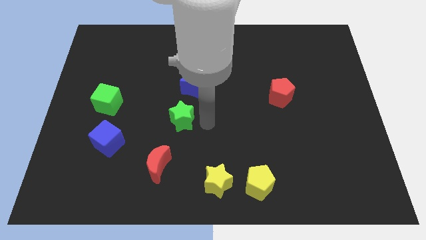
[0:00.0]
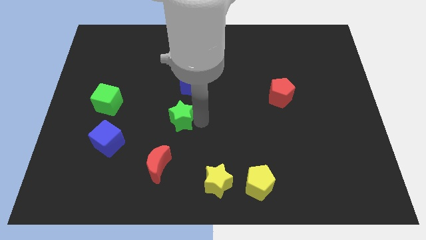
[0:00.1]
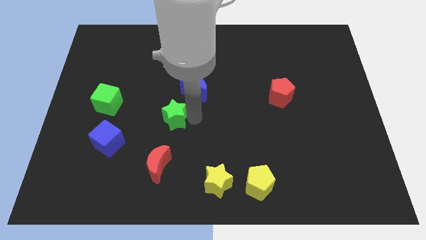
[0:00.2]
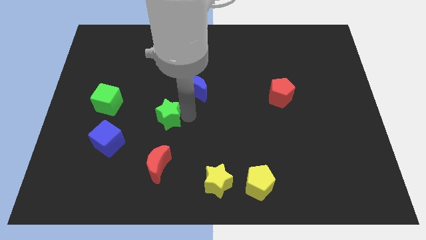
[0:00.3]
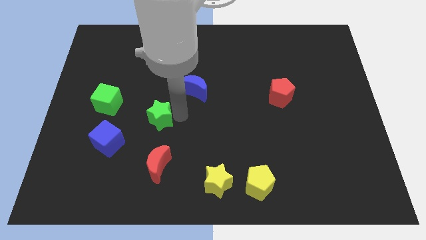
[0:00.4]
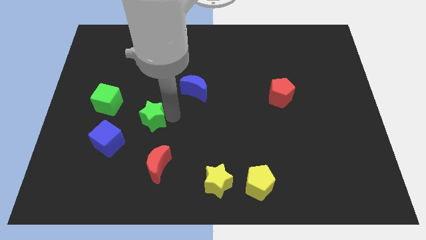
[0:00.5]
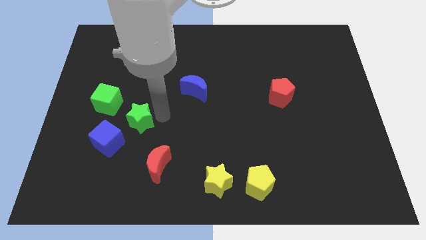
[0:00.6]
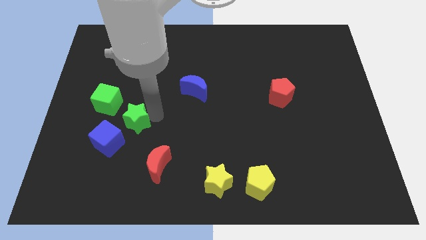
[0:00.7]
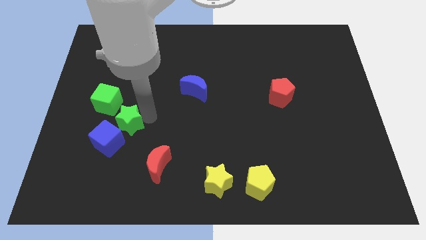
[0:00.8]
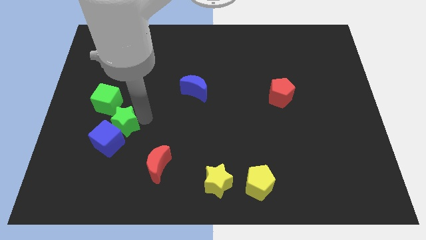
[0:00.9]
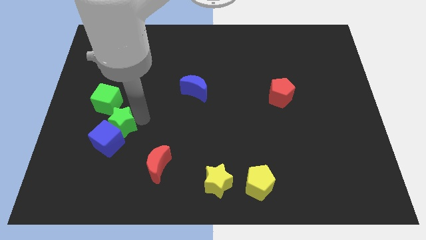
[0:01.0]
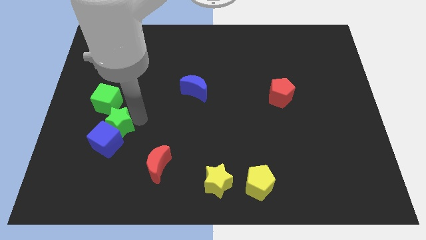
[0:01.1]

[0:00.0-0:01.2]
push the green star into the blue cube

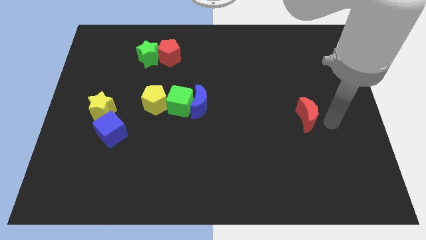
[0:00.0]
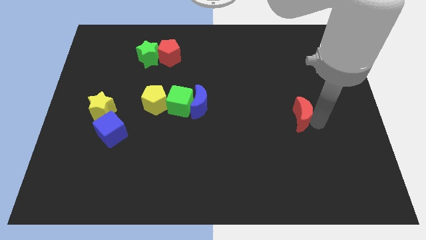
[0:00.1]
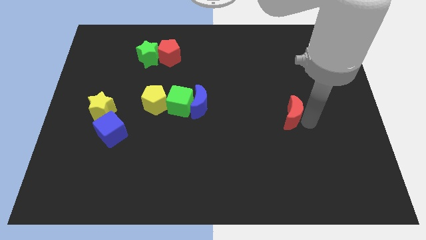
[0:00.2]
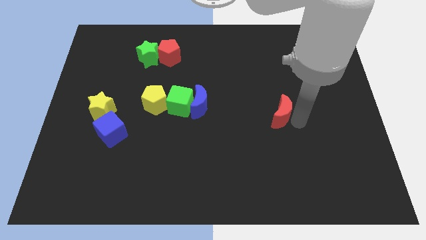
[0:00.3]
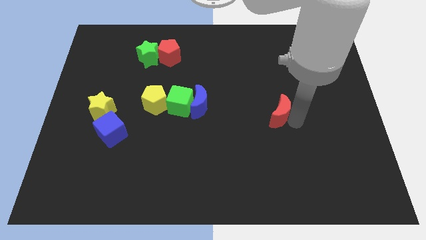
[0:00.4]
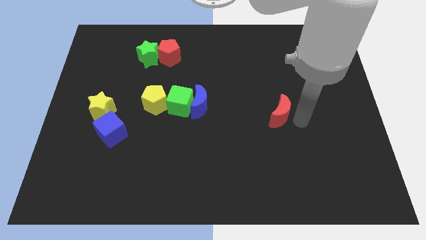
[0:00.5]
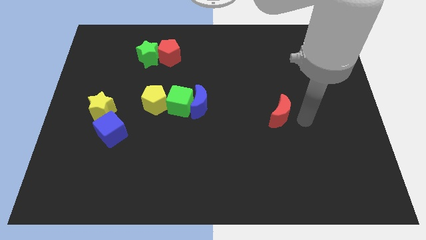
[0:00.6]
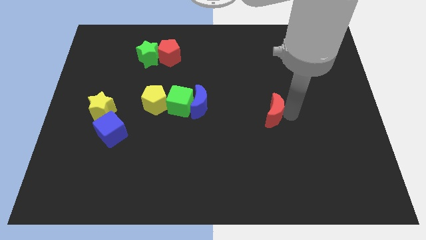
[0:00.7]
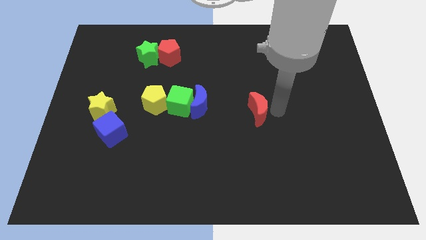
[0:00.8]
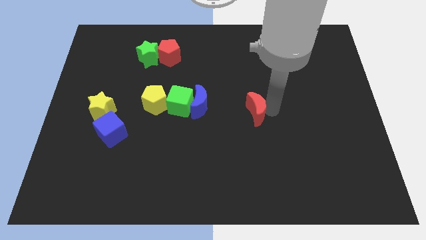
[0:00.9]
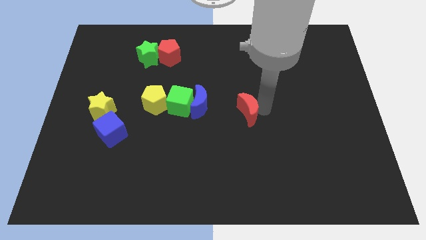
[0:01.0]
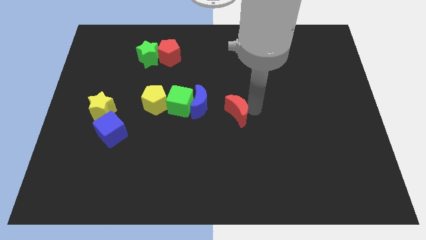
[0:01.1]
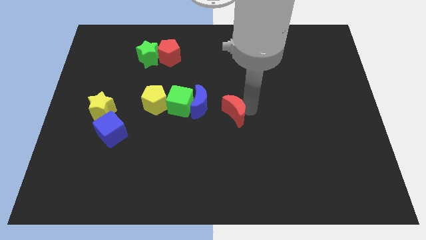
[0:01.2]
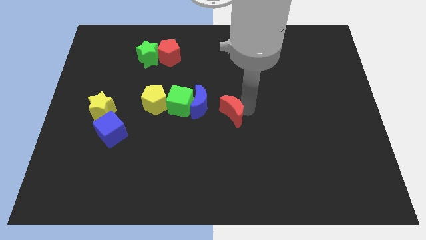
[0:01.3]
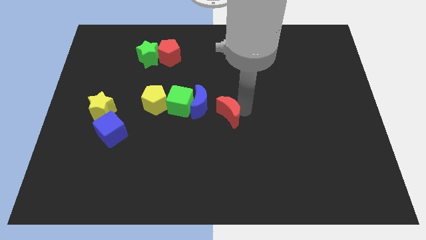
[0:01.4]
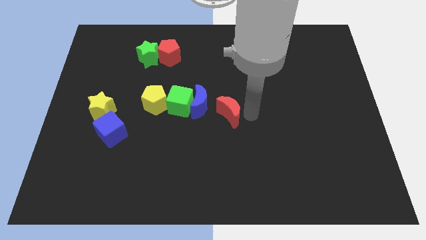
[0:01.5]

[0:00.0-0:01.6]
move the red moon to the center

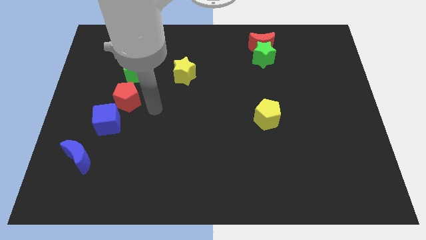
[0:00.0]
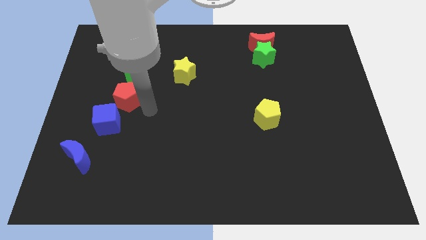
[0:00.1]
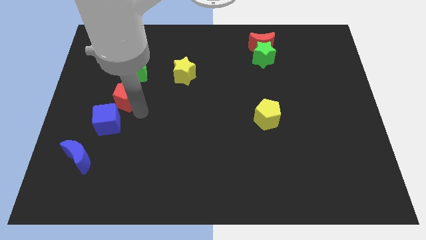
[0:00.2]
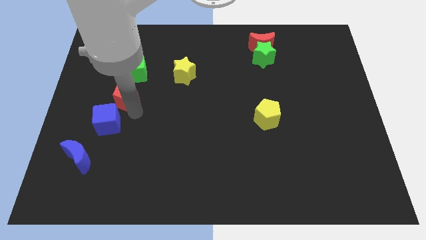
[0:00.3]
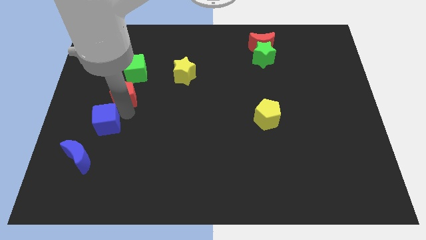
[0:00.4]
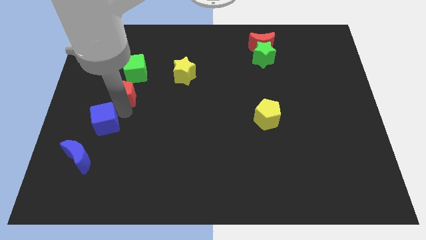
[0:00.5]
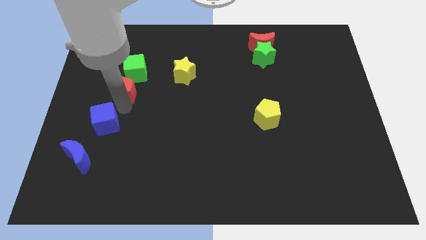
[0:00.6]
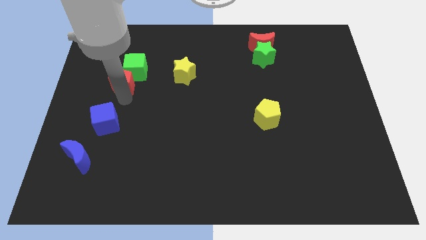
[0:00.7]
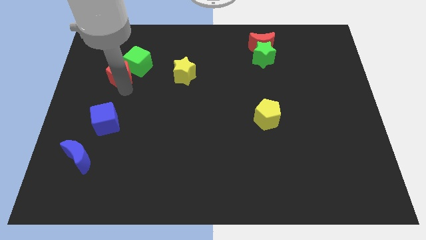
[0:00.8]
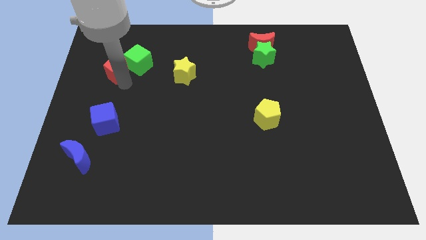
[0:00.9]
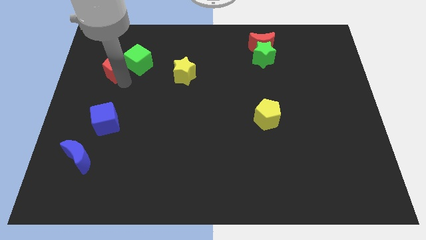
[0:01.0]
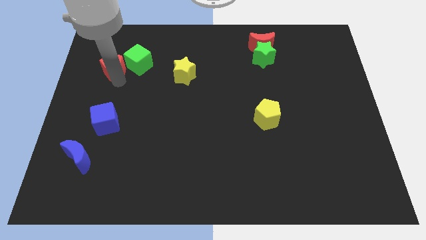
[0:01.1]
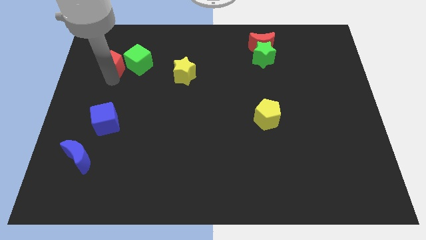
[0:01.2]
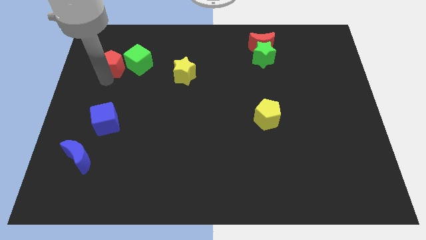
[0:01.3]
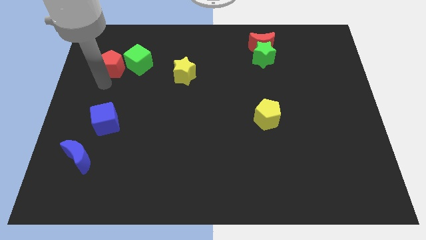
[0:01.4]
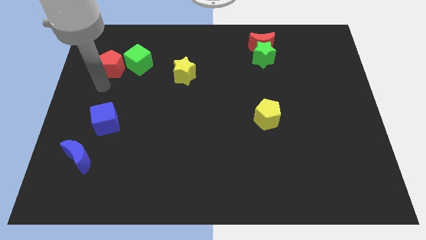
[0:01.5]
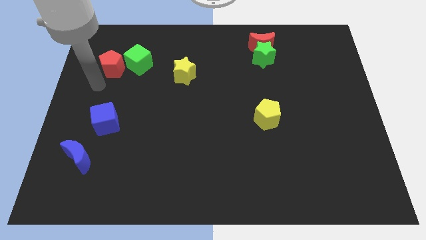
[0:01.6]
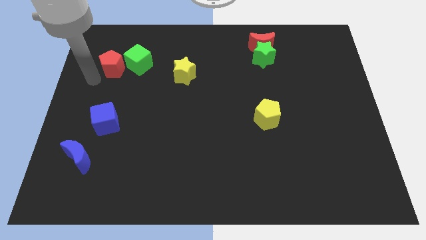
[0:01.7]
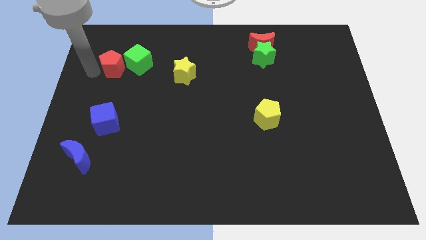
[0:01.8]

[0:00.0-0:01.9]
push red pentagon left to the green cube

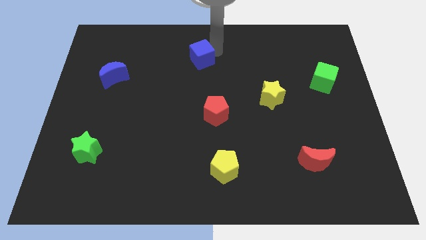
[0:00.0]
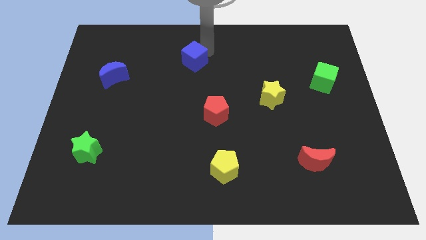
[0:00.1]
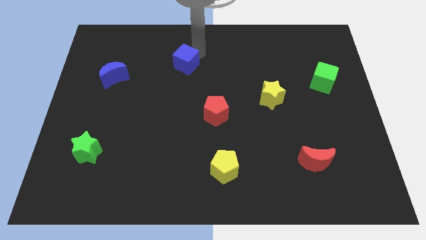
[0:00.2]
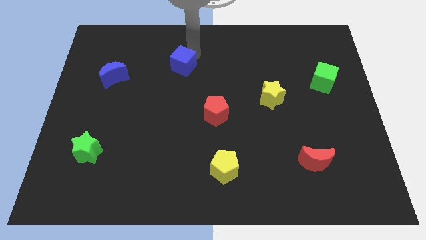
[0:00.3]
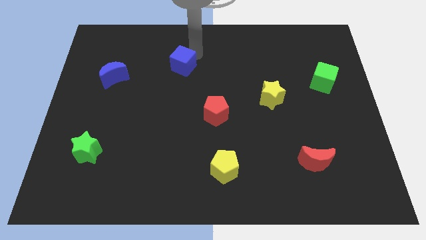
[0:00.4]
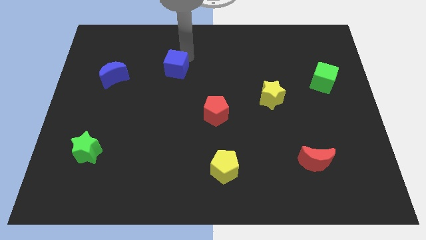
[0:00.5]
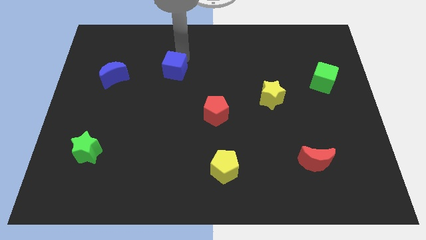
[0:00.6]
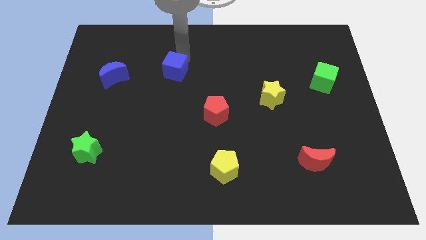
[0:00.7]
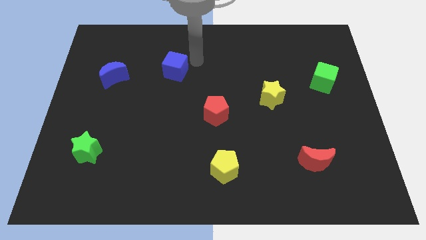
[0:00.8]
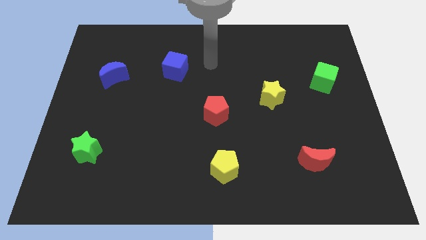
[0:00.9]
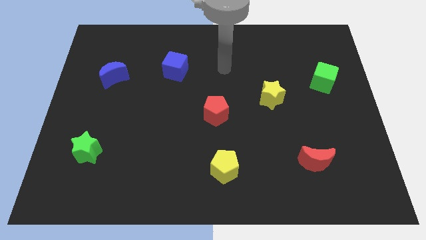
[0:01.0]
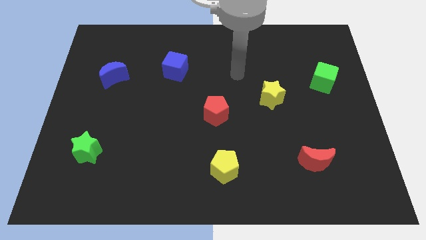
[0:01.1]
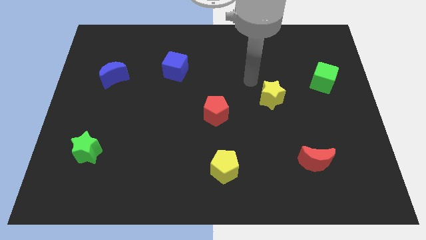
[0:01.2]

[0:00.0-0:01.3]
move the blue cube to the right of the blue crescent

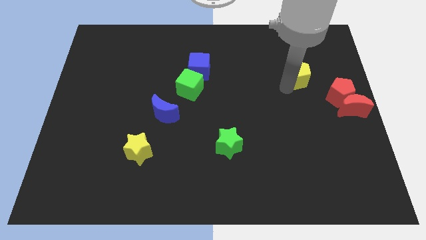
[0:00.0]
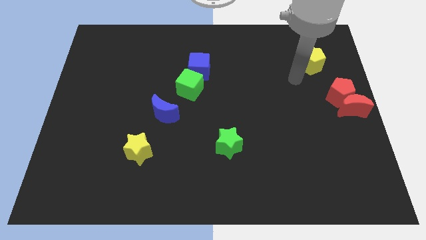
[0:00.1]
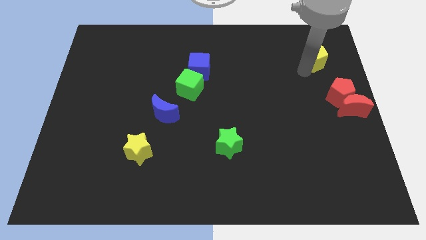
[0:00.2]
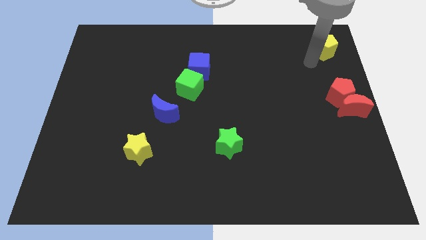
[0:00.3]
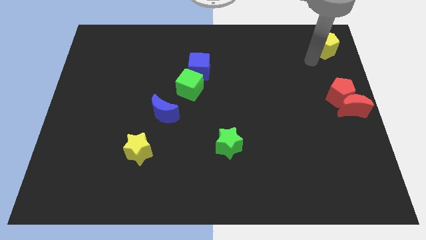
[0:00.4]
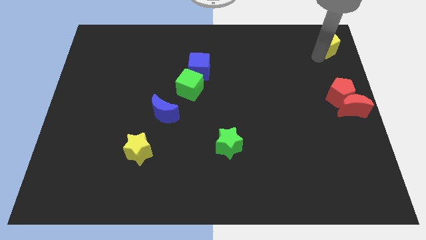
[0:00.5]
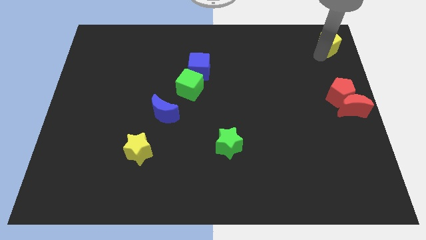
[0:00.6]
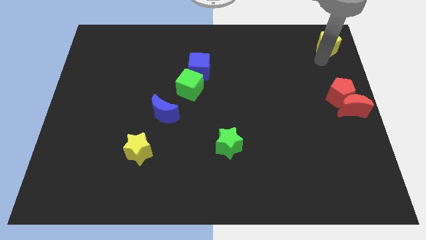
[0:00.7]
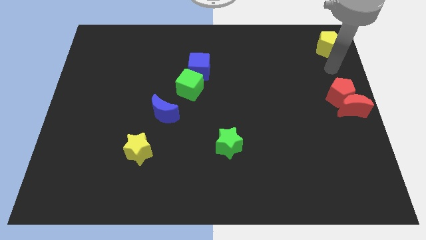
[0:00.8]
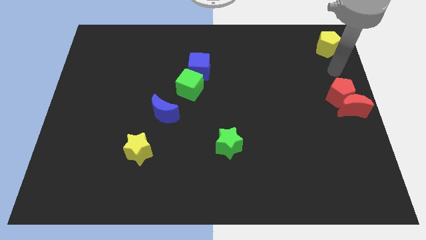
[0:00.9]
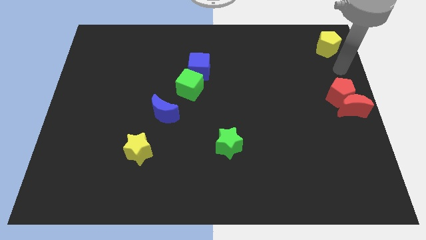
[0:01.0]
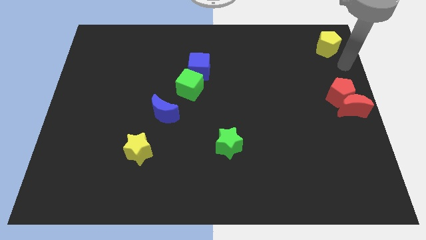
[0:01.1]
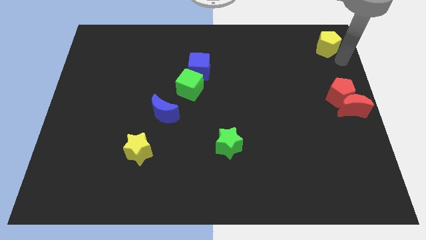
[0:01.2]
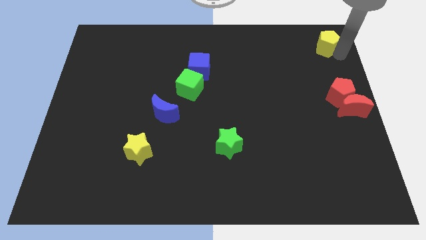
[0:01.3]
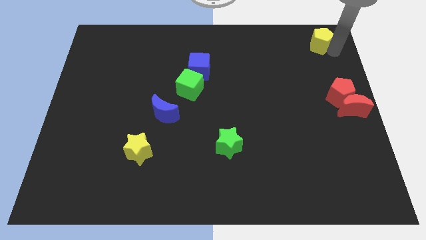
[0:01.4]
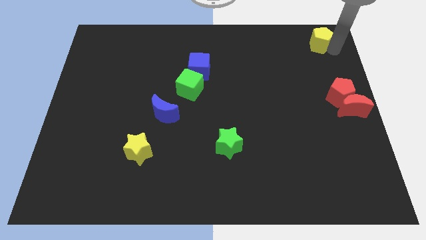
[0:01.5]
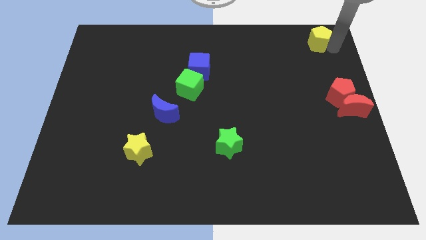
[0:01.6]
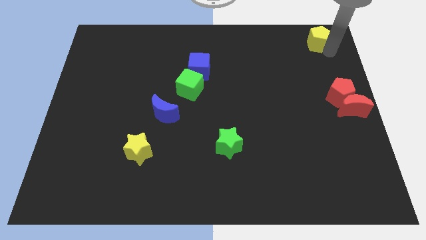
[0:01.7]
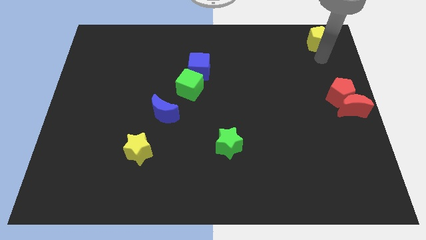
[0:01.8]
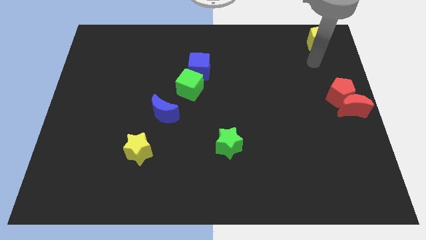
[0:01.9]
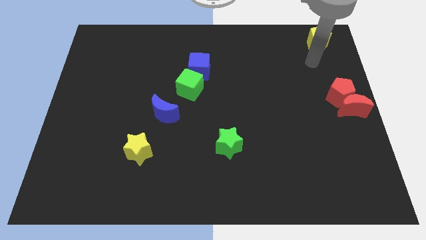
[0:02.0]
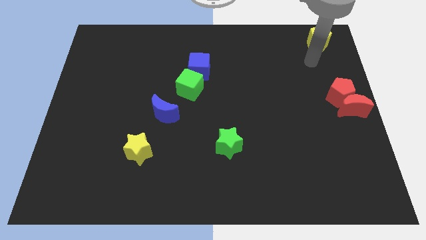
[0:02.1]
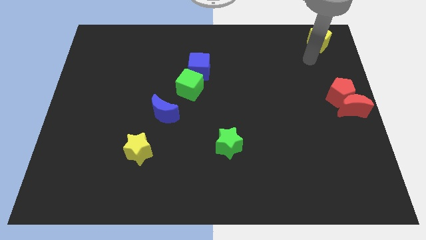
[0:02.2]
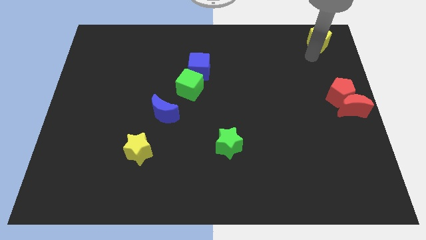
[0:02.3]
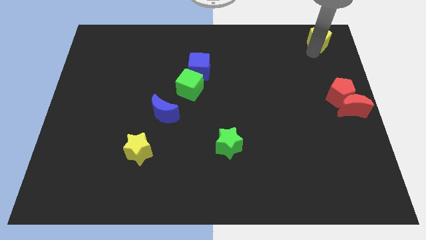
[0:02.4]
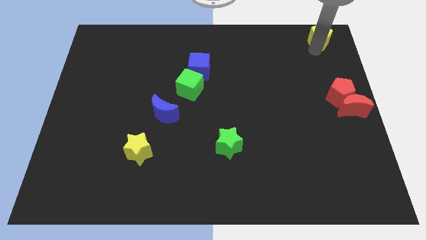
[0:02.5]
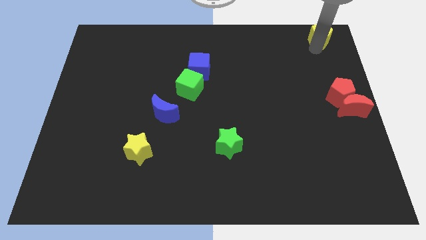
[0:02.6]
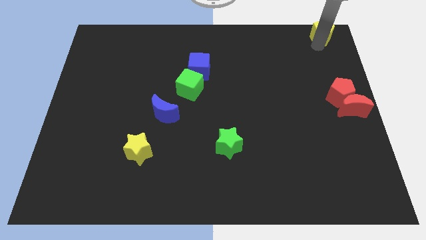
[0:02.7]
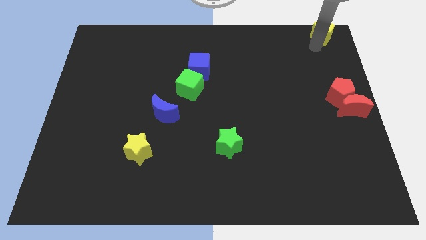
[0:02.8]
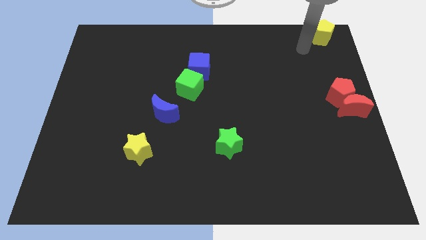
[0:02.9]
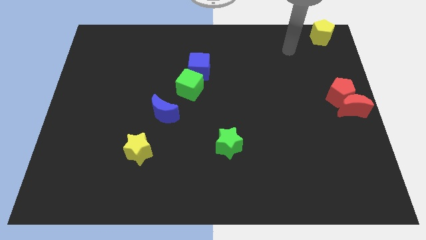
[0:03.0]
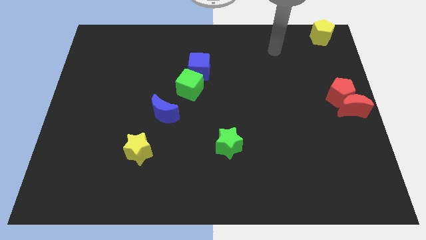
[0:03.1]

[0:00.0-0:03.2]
move yellow pentagon to top right corner
